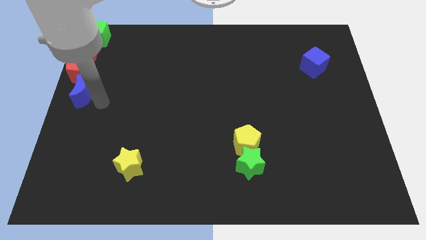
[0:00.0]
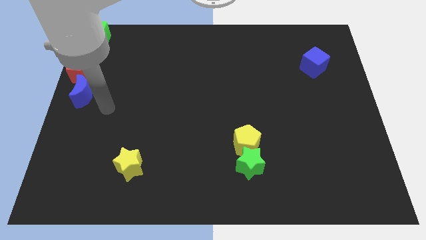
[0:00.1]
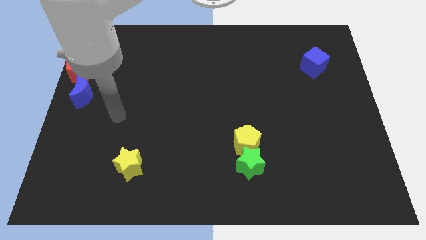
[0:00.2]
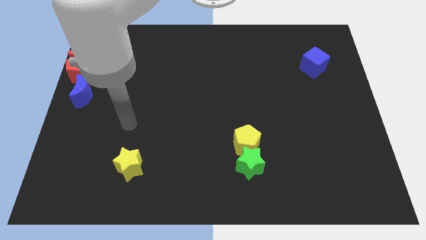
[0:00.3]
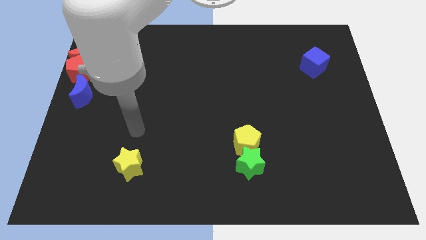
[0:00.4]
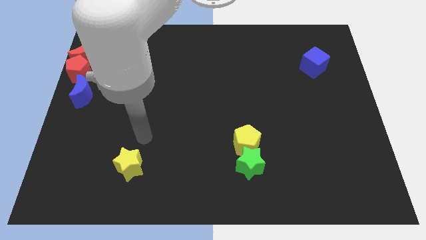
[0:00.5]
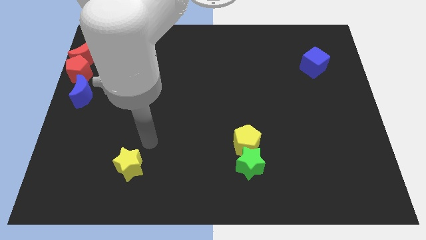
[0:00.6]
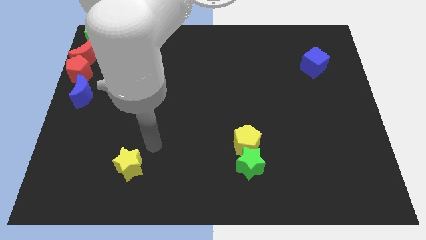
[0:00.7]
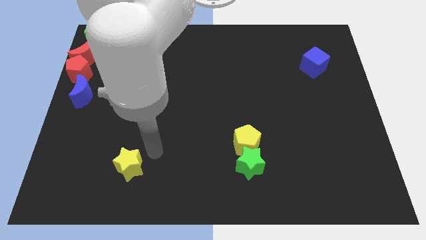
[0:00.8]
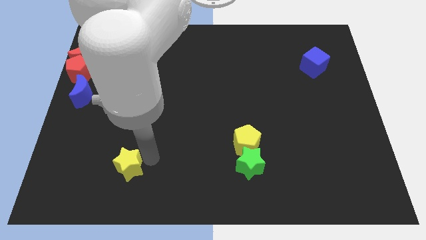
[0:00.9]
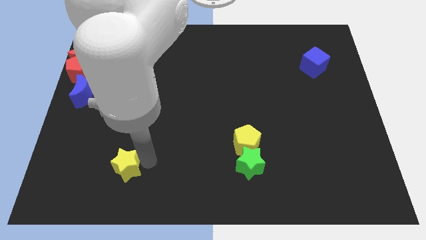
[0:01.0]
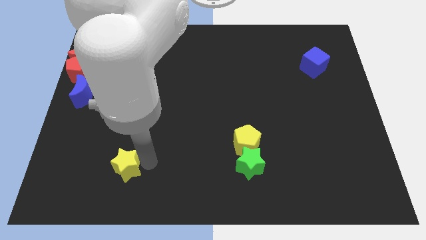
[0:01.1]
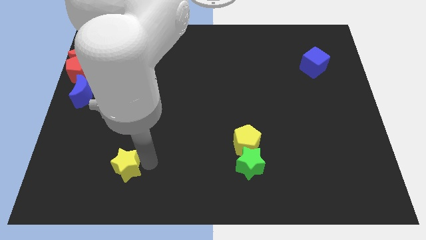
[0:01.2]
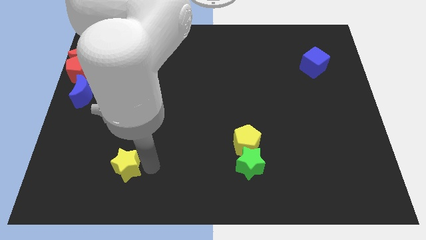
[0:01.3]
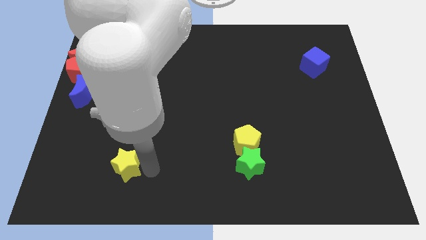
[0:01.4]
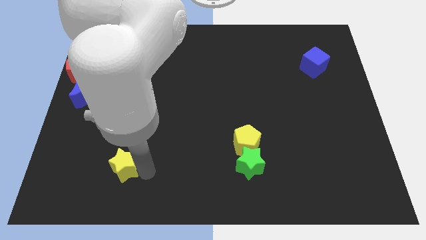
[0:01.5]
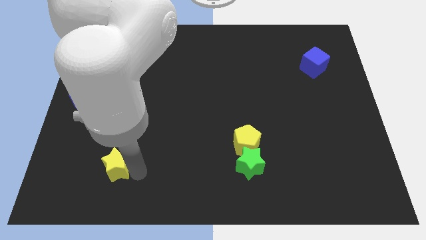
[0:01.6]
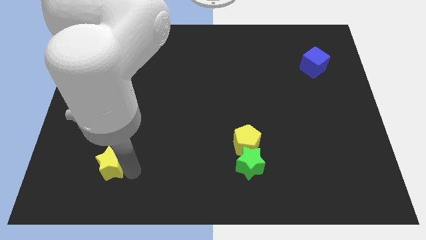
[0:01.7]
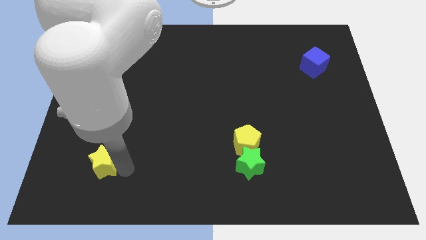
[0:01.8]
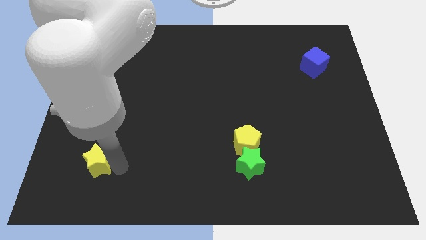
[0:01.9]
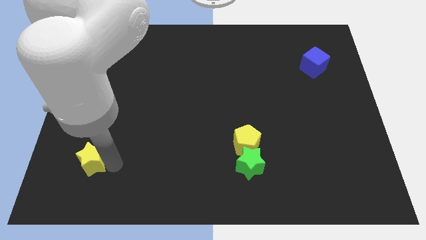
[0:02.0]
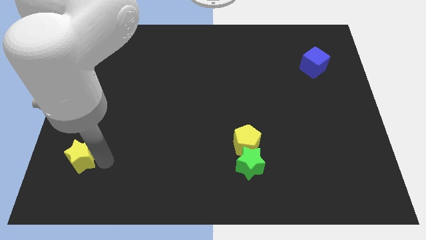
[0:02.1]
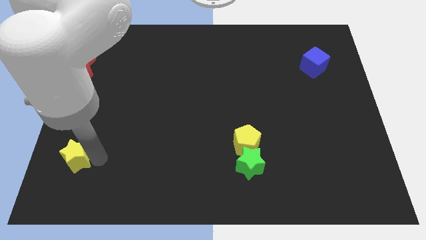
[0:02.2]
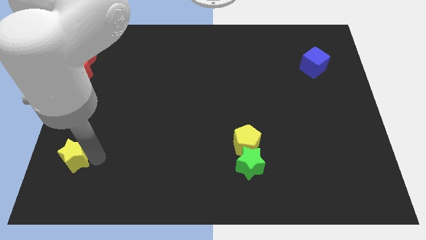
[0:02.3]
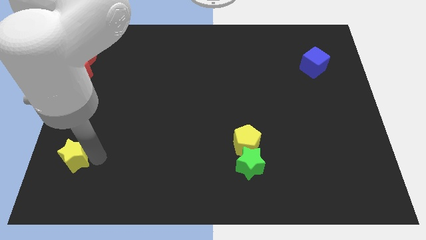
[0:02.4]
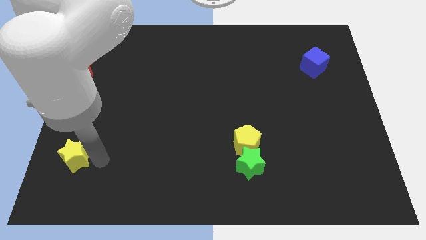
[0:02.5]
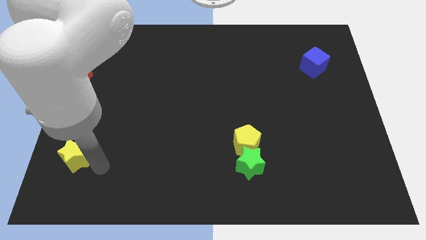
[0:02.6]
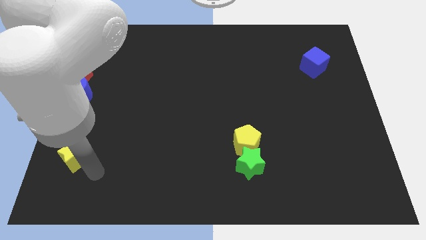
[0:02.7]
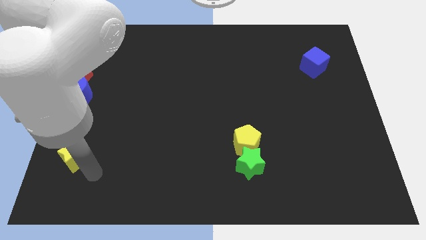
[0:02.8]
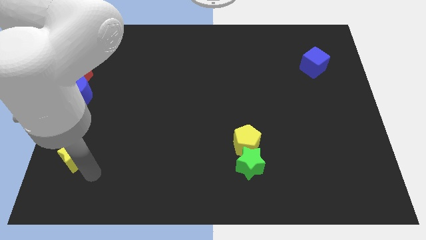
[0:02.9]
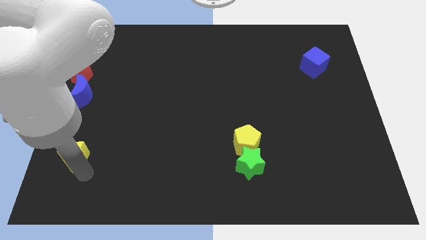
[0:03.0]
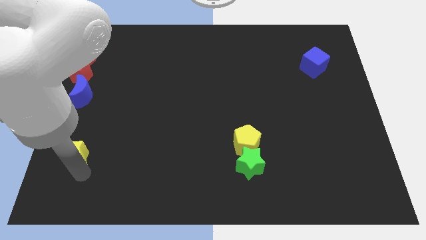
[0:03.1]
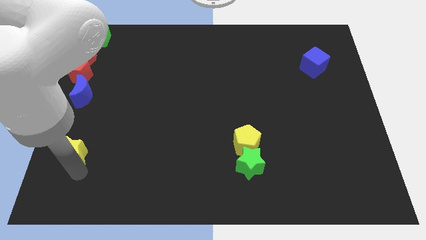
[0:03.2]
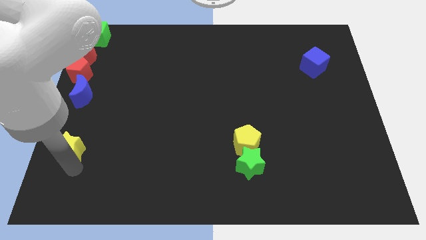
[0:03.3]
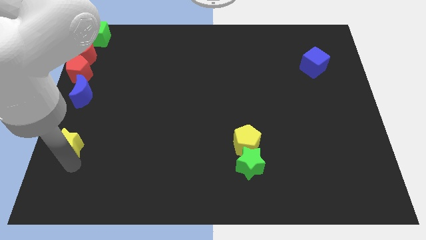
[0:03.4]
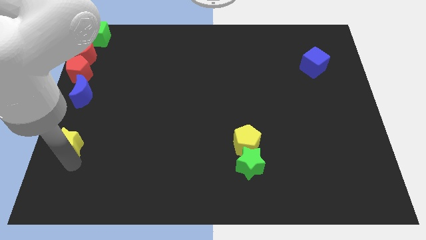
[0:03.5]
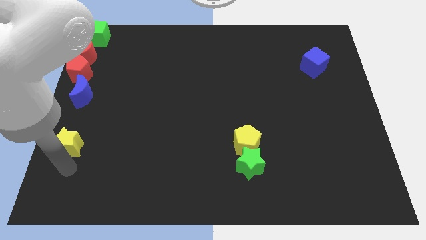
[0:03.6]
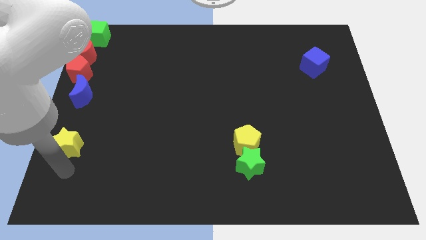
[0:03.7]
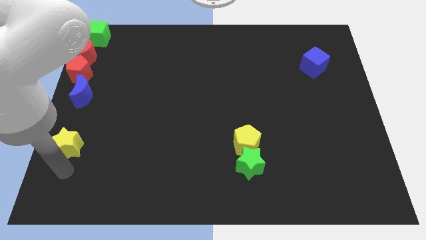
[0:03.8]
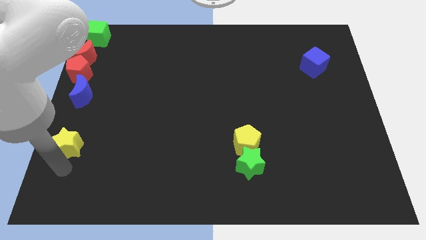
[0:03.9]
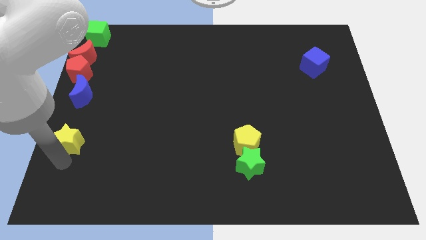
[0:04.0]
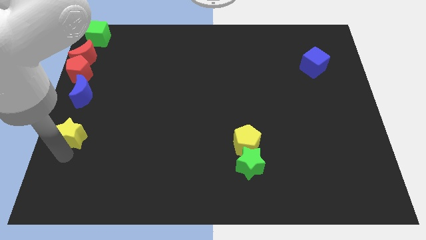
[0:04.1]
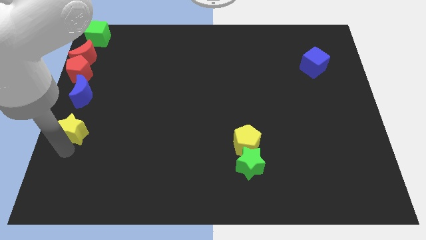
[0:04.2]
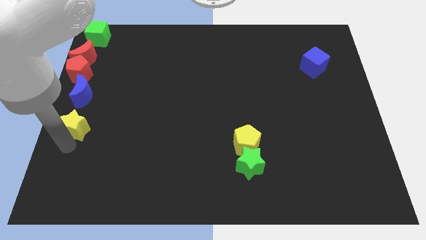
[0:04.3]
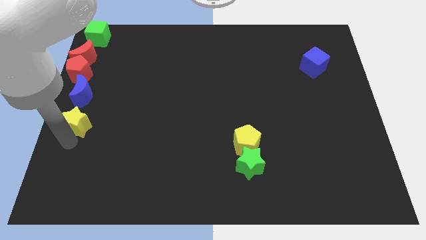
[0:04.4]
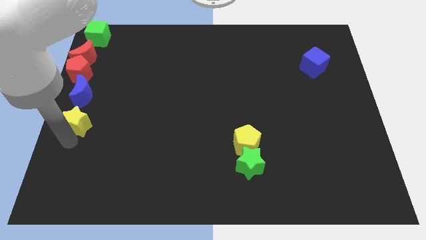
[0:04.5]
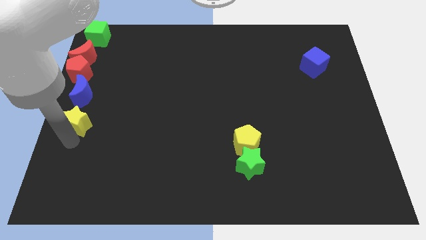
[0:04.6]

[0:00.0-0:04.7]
move the yellow star to the bottom of the blue crescent

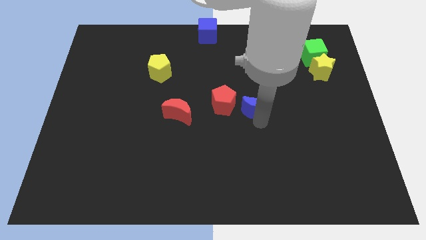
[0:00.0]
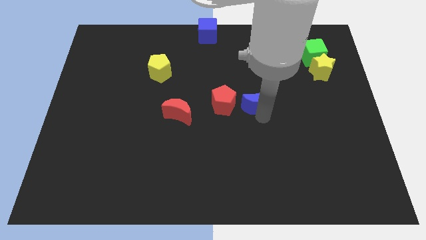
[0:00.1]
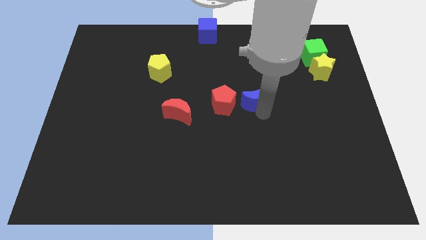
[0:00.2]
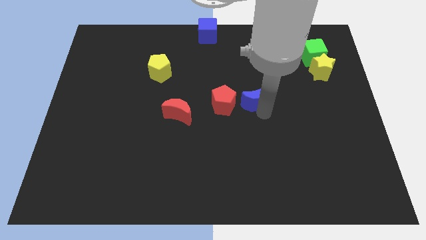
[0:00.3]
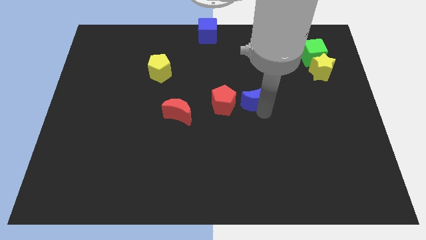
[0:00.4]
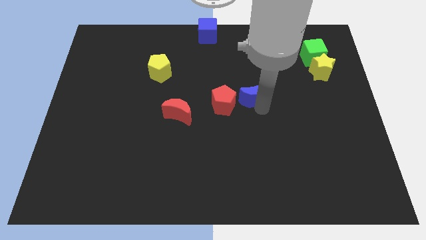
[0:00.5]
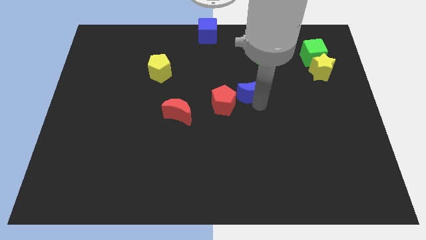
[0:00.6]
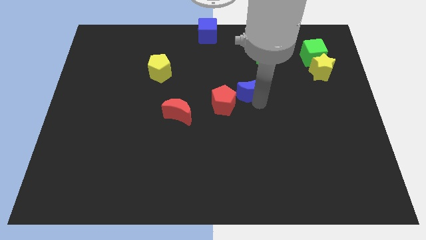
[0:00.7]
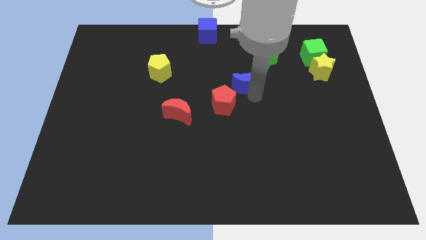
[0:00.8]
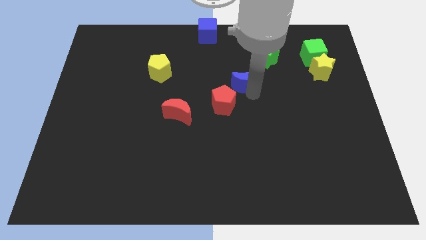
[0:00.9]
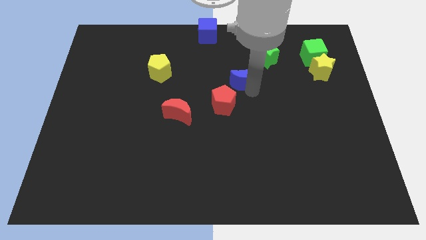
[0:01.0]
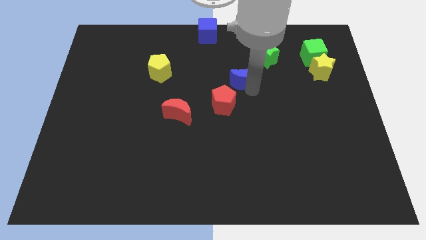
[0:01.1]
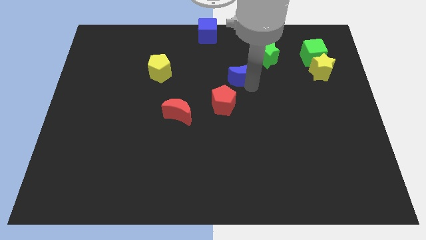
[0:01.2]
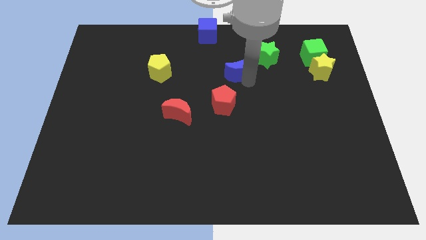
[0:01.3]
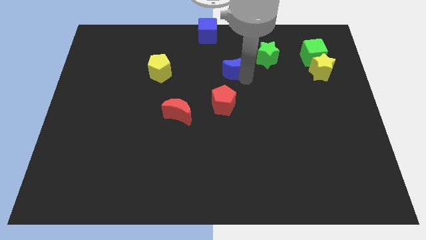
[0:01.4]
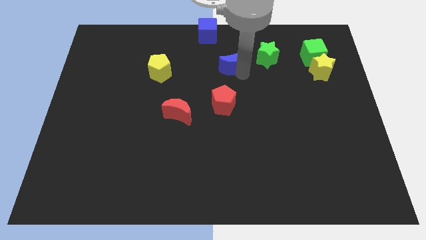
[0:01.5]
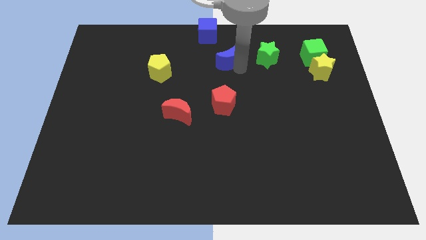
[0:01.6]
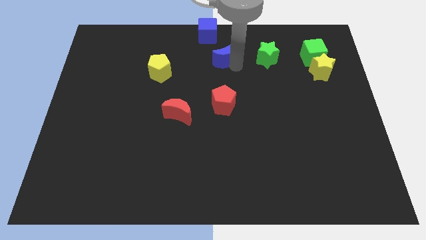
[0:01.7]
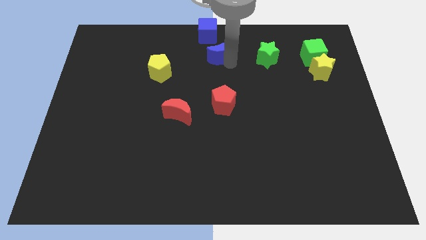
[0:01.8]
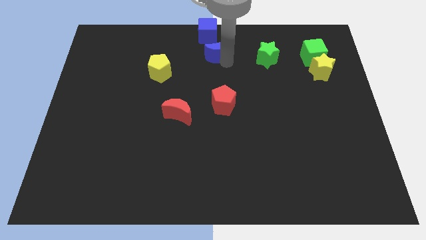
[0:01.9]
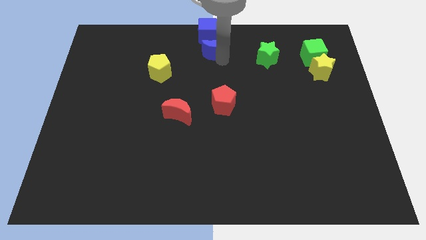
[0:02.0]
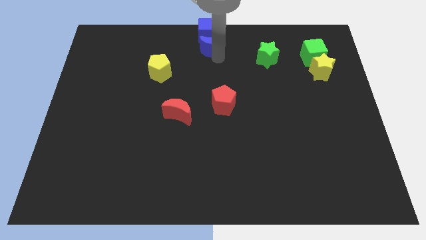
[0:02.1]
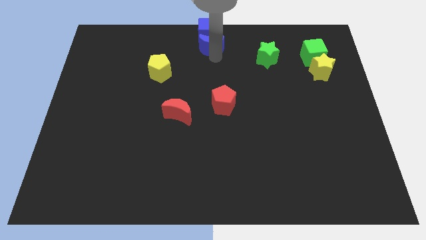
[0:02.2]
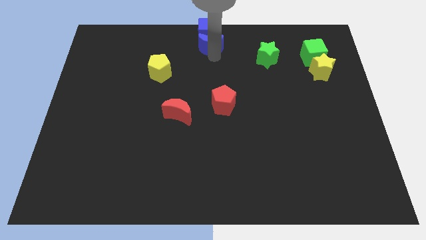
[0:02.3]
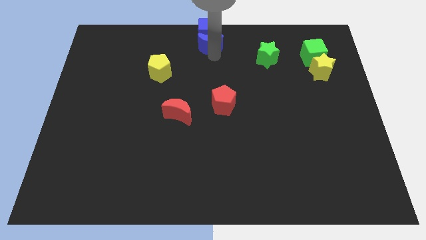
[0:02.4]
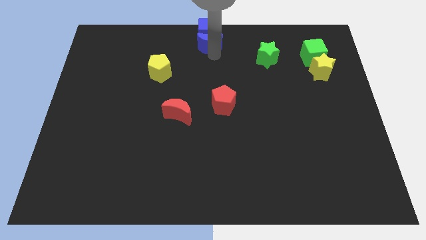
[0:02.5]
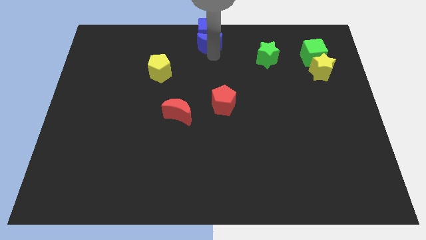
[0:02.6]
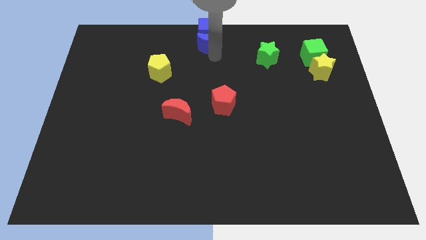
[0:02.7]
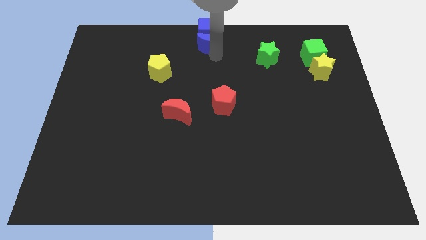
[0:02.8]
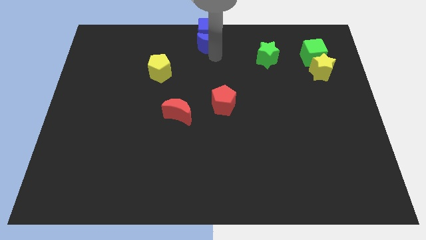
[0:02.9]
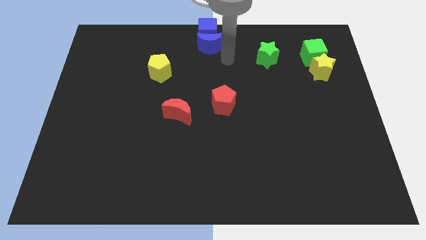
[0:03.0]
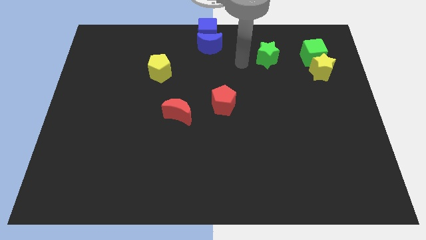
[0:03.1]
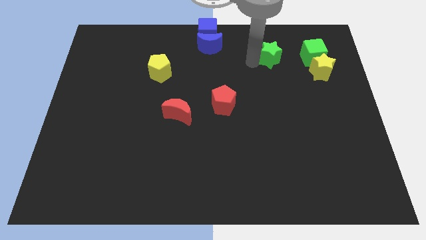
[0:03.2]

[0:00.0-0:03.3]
put the blue crescent below the blue cube

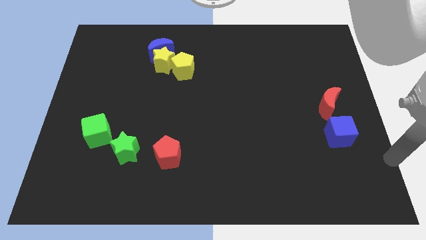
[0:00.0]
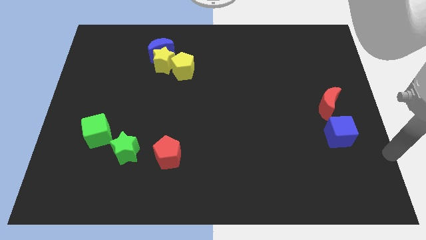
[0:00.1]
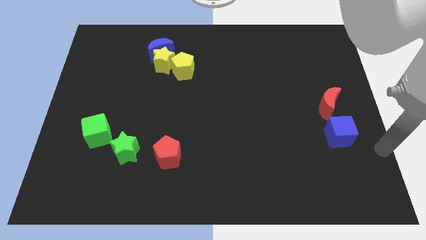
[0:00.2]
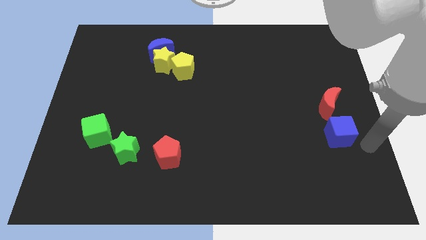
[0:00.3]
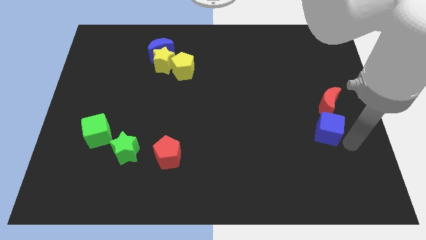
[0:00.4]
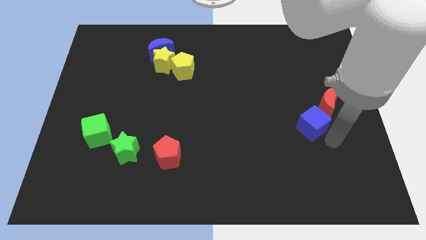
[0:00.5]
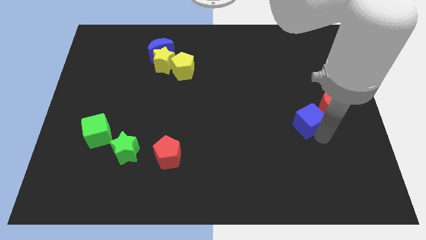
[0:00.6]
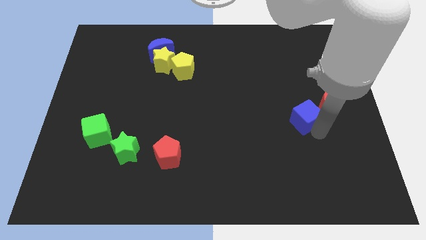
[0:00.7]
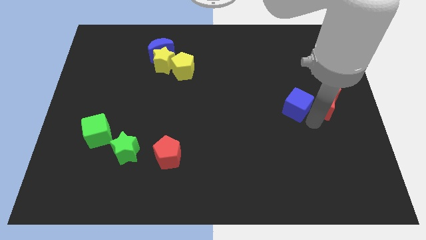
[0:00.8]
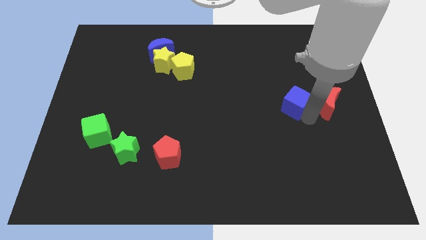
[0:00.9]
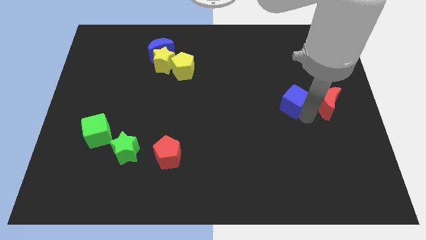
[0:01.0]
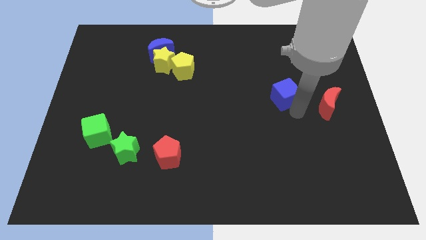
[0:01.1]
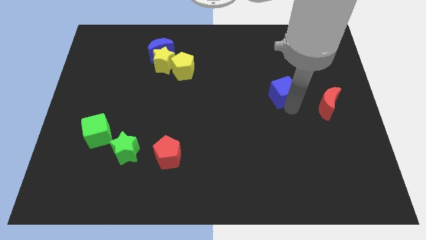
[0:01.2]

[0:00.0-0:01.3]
place the blue cube to the left of the red moon
